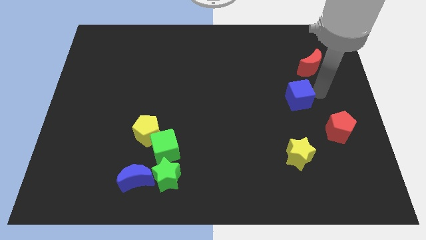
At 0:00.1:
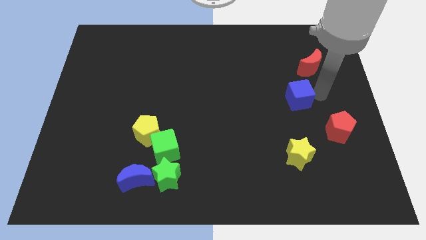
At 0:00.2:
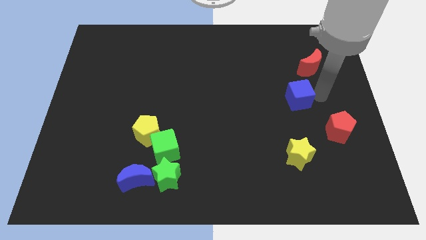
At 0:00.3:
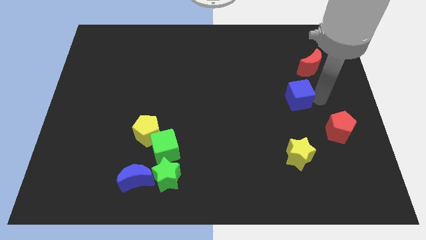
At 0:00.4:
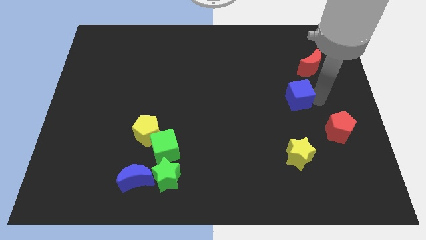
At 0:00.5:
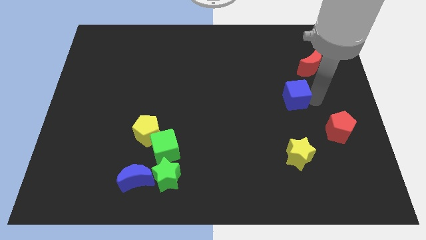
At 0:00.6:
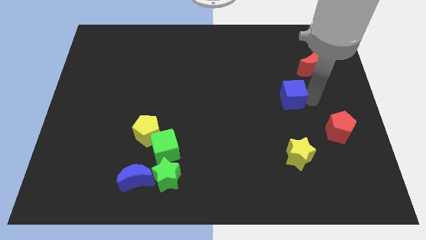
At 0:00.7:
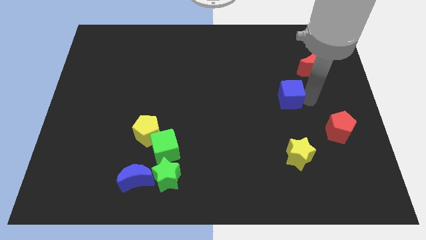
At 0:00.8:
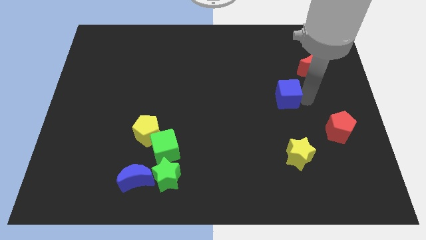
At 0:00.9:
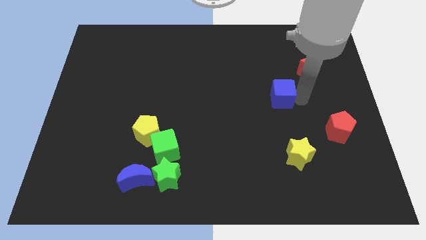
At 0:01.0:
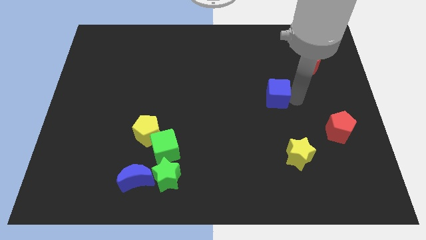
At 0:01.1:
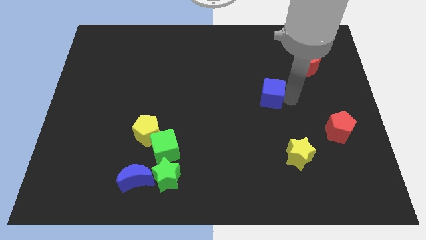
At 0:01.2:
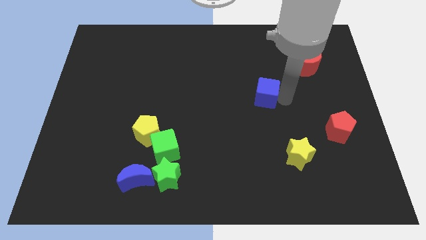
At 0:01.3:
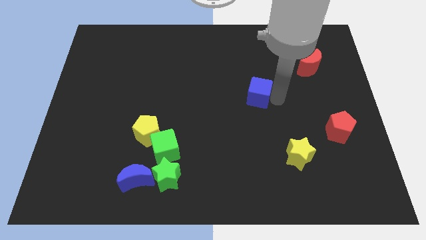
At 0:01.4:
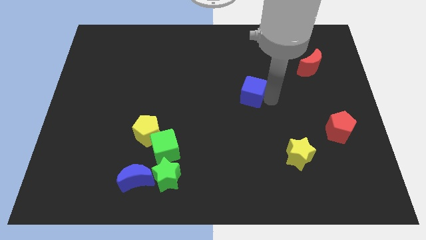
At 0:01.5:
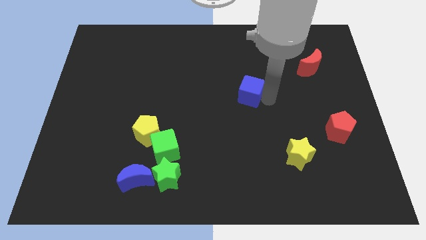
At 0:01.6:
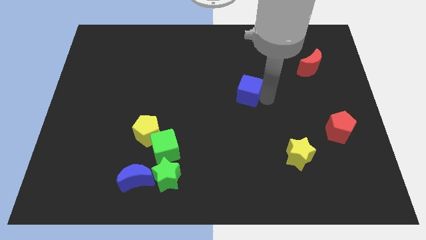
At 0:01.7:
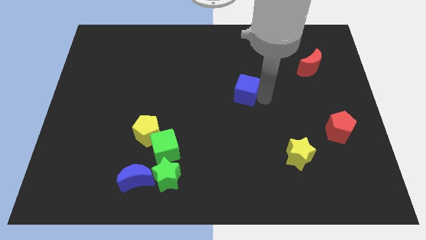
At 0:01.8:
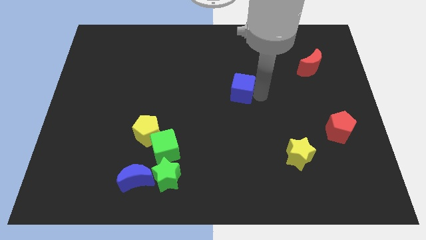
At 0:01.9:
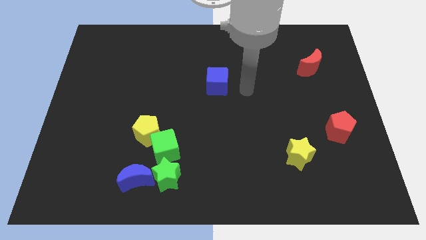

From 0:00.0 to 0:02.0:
place the blue cube diagonally above the green cube

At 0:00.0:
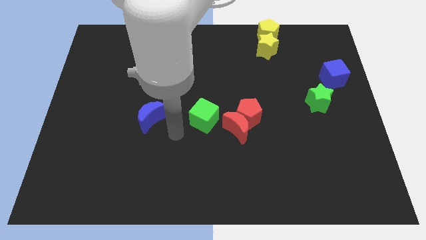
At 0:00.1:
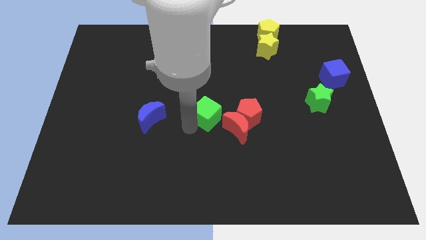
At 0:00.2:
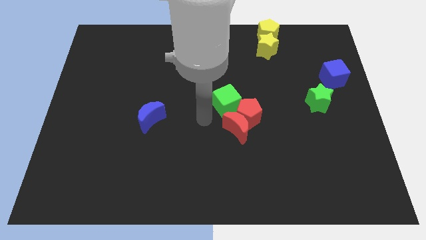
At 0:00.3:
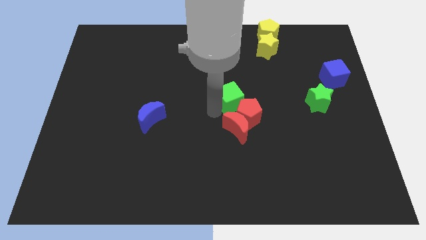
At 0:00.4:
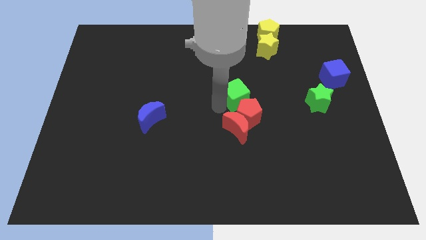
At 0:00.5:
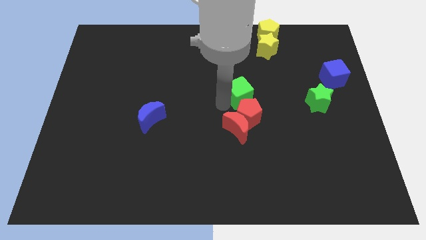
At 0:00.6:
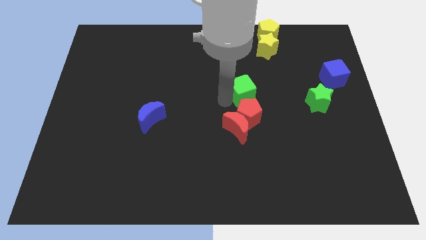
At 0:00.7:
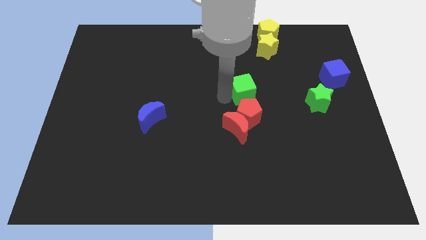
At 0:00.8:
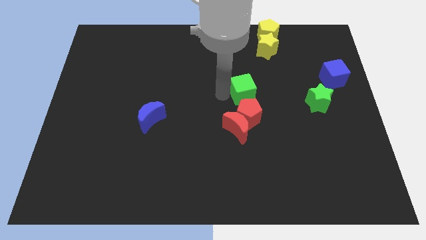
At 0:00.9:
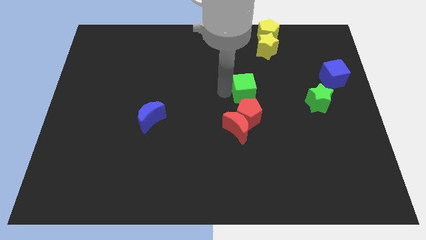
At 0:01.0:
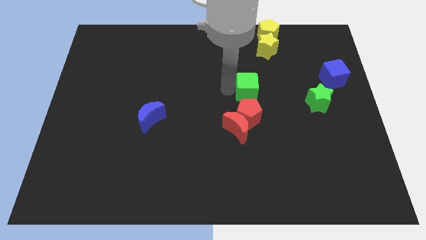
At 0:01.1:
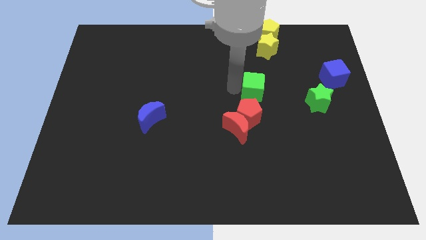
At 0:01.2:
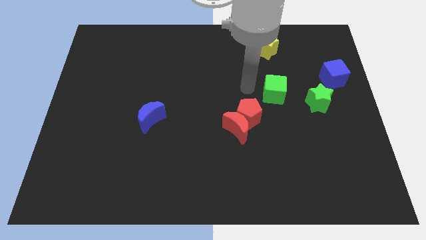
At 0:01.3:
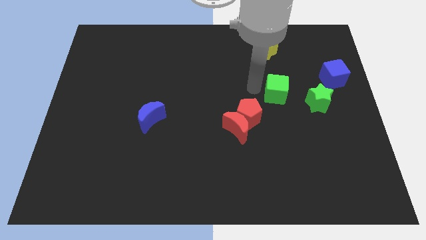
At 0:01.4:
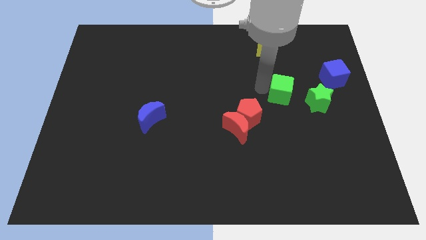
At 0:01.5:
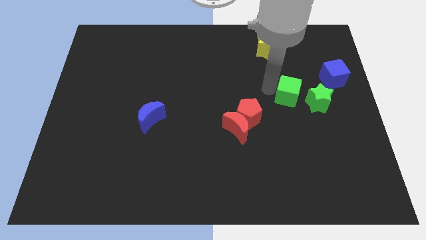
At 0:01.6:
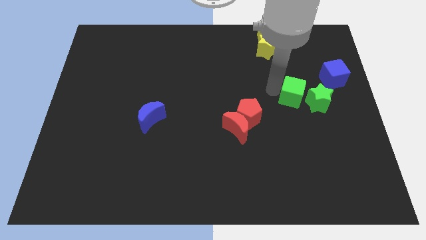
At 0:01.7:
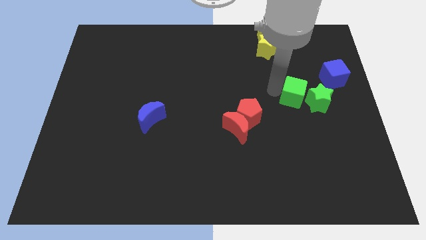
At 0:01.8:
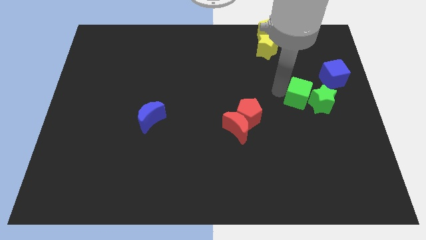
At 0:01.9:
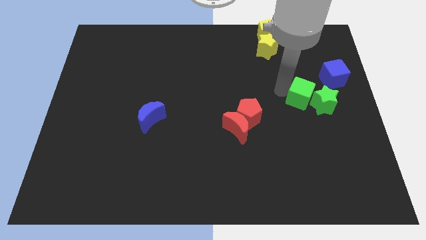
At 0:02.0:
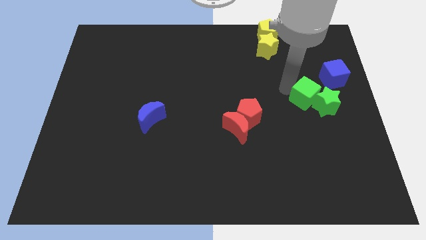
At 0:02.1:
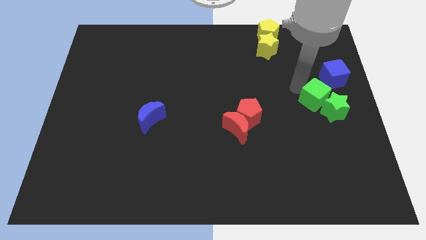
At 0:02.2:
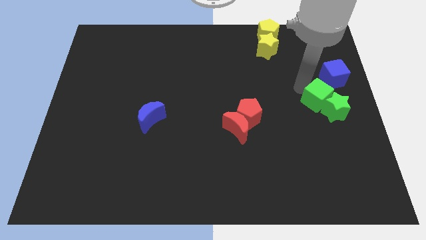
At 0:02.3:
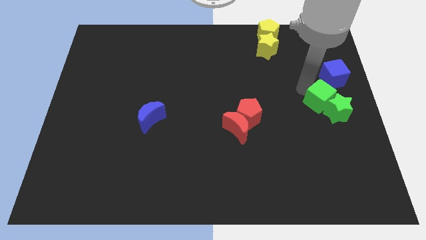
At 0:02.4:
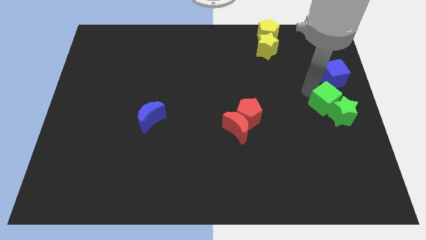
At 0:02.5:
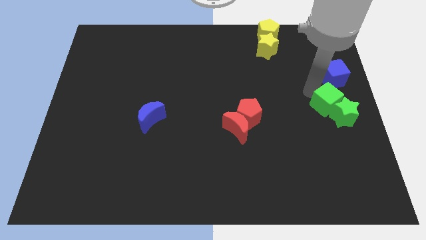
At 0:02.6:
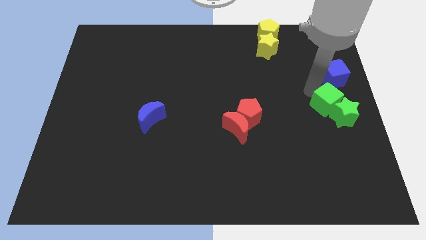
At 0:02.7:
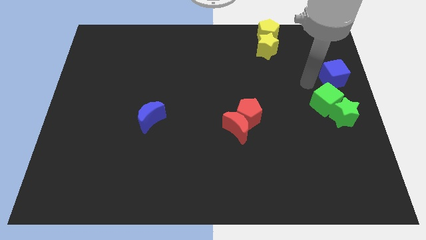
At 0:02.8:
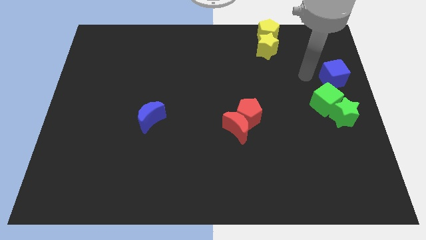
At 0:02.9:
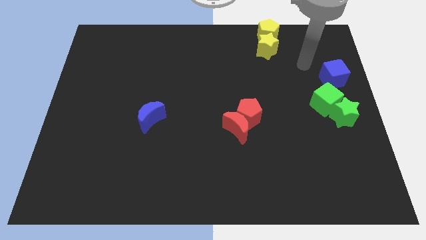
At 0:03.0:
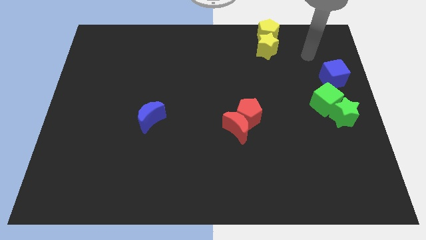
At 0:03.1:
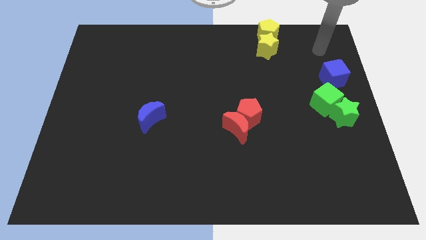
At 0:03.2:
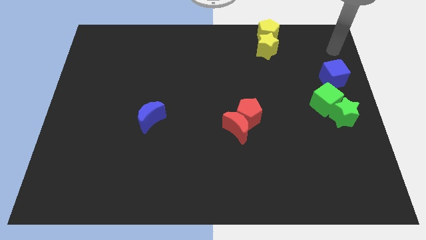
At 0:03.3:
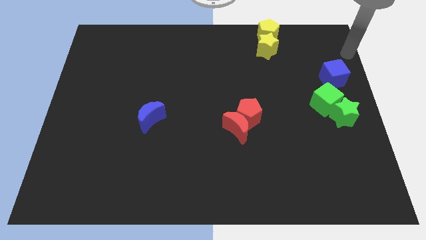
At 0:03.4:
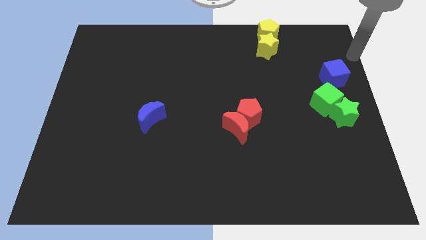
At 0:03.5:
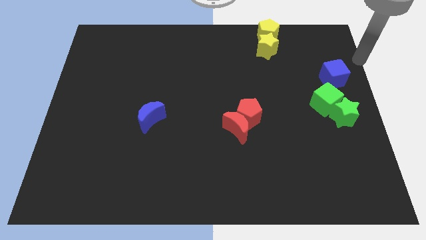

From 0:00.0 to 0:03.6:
push the green cube into the green star

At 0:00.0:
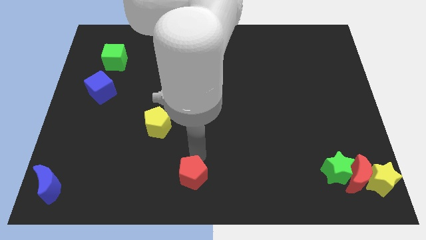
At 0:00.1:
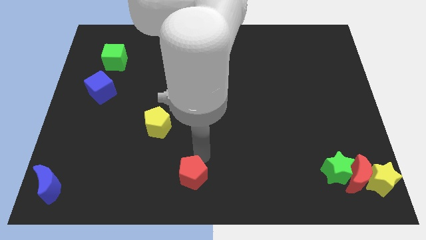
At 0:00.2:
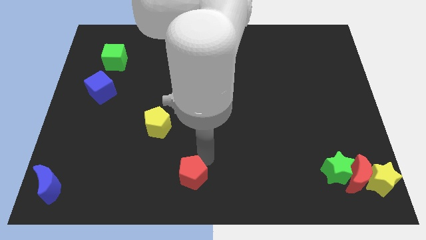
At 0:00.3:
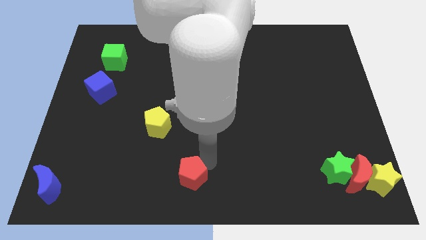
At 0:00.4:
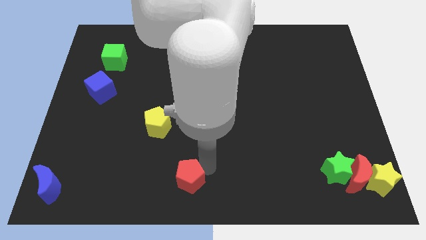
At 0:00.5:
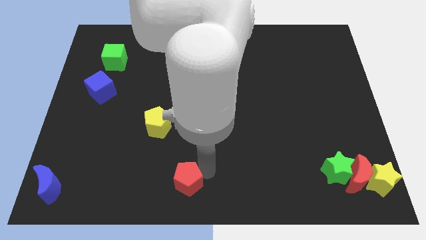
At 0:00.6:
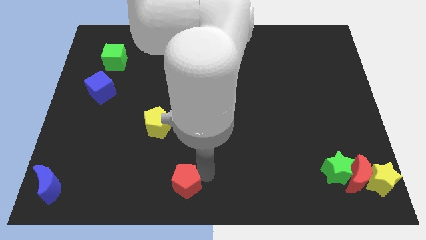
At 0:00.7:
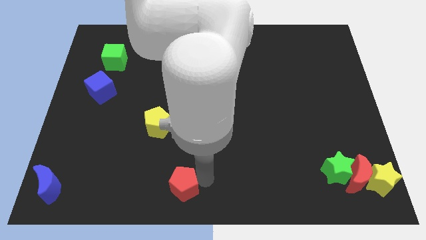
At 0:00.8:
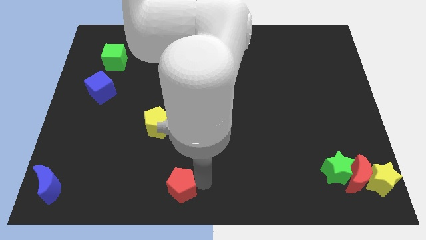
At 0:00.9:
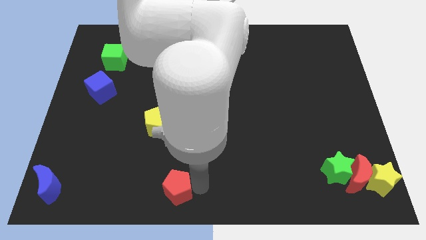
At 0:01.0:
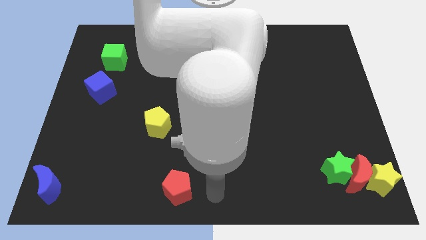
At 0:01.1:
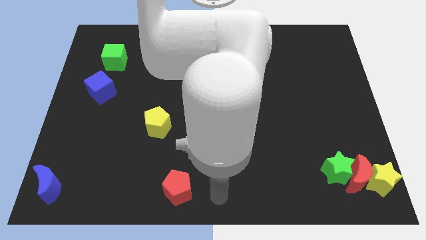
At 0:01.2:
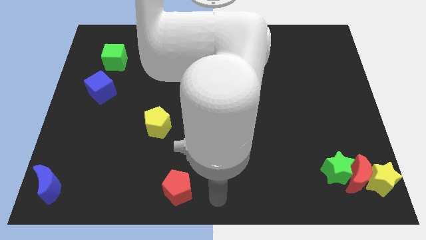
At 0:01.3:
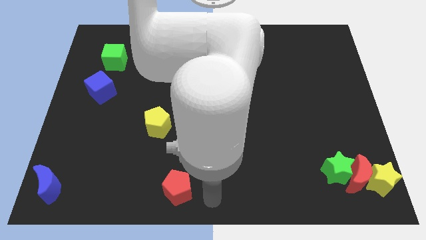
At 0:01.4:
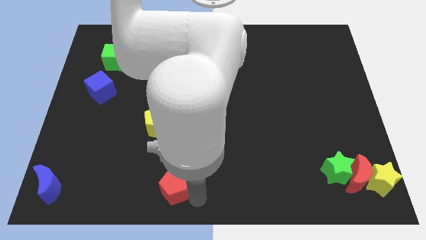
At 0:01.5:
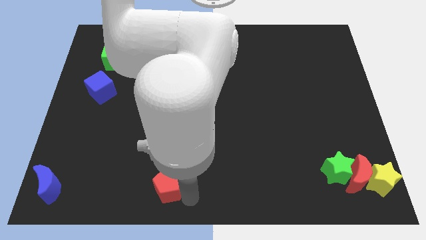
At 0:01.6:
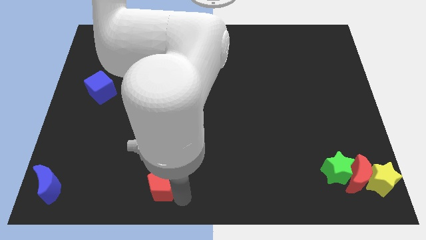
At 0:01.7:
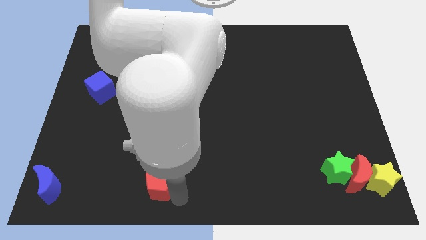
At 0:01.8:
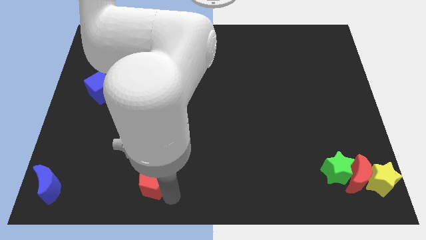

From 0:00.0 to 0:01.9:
push red pentagon below yellow pentagon

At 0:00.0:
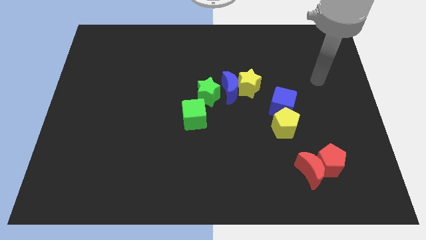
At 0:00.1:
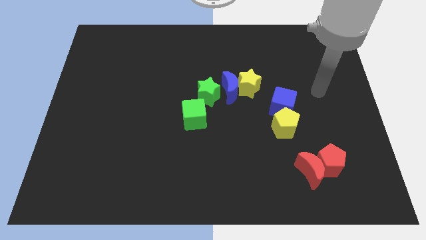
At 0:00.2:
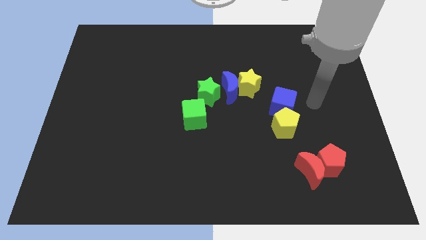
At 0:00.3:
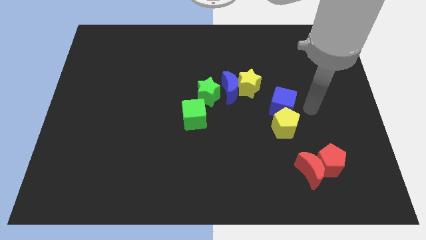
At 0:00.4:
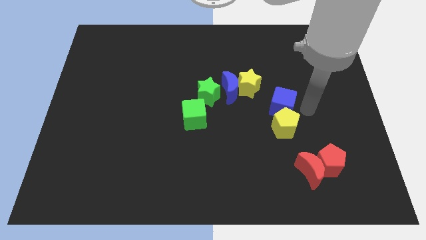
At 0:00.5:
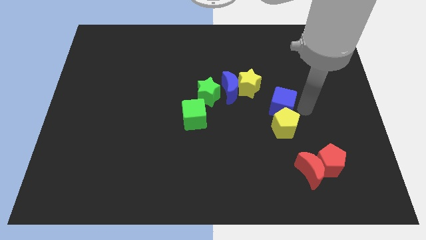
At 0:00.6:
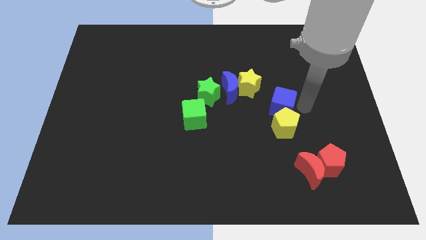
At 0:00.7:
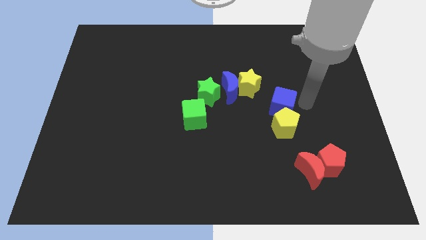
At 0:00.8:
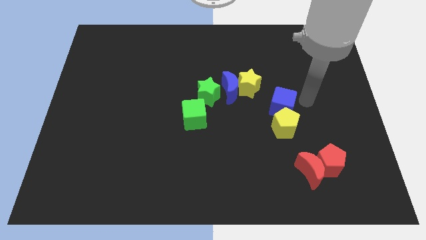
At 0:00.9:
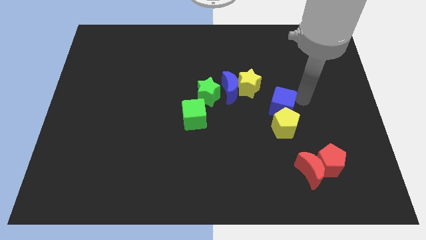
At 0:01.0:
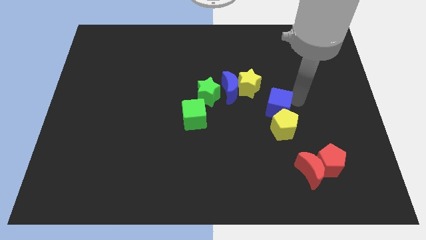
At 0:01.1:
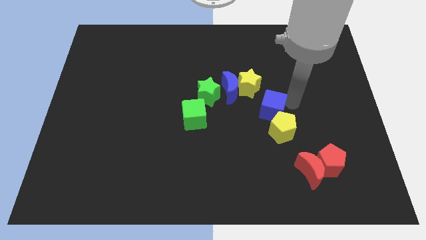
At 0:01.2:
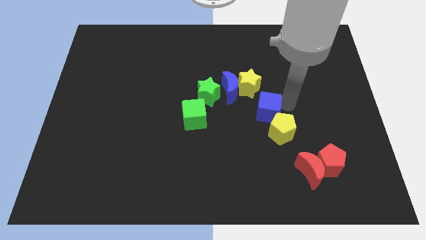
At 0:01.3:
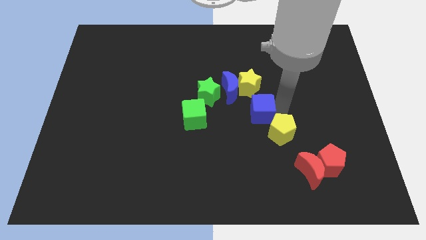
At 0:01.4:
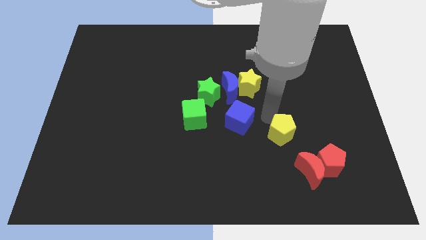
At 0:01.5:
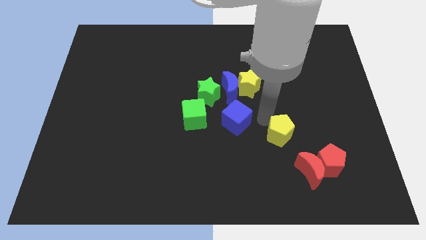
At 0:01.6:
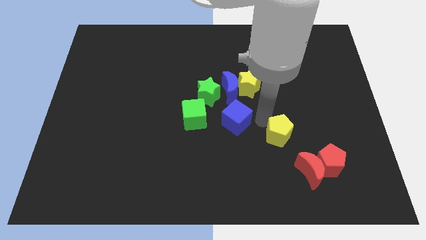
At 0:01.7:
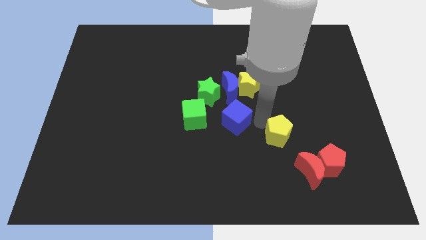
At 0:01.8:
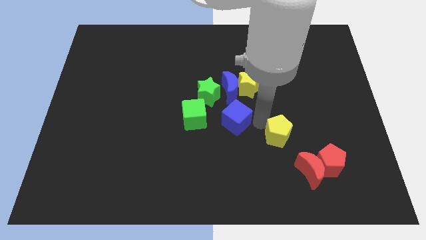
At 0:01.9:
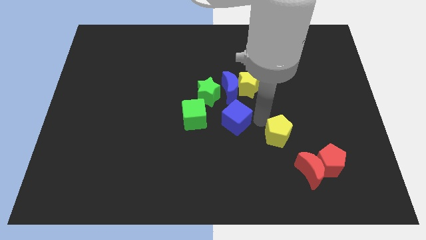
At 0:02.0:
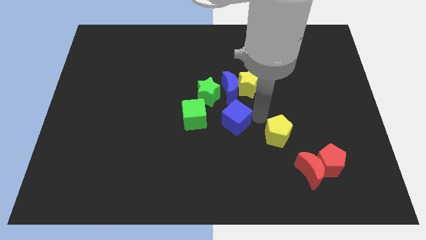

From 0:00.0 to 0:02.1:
separate blue cube from the yellow pentagon
